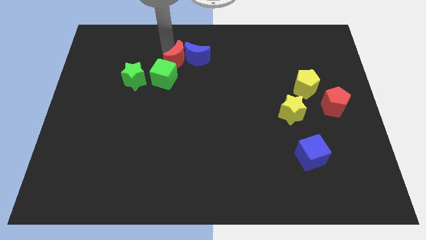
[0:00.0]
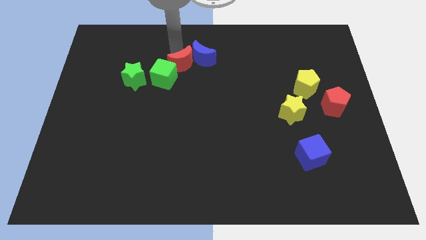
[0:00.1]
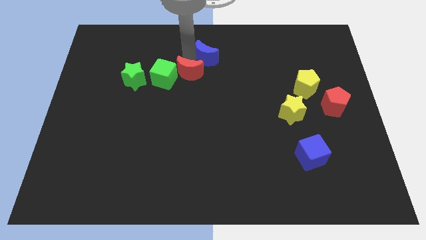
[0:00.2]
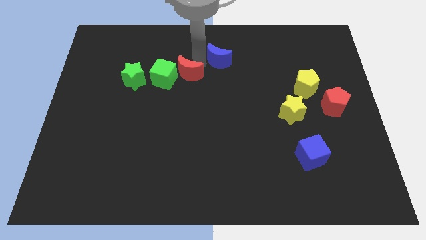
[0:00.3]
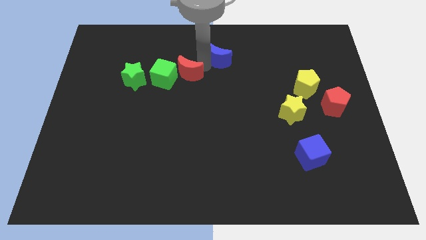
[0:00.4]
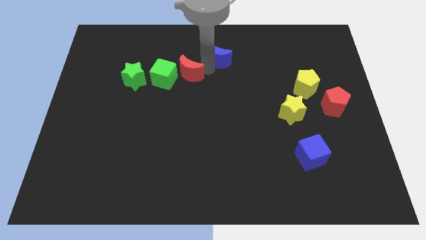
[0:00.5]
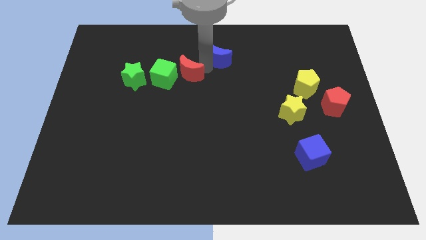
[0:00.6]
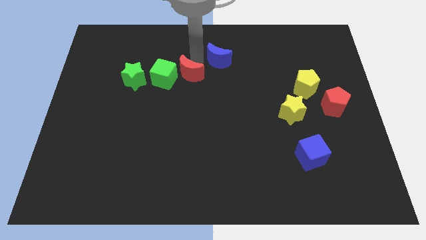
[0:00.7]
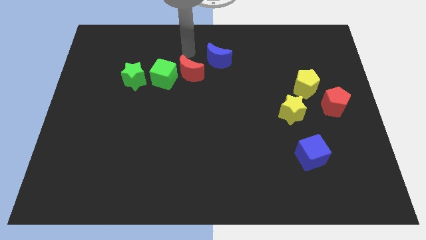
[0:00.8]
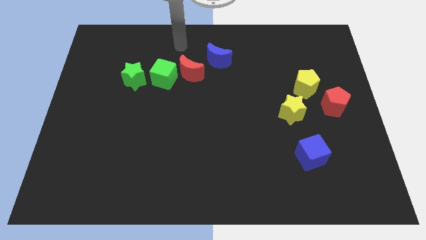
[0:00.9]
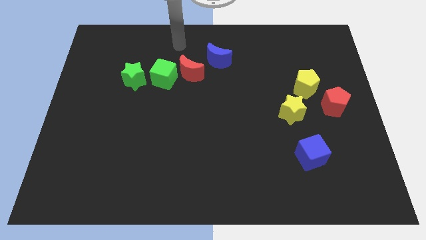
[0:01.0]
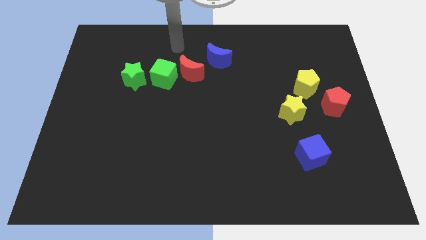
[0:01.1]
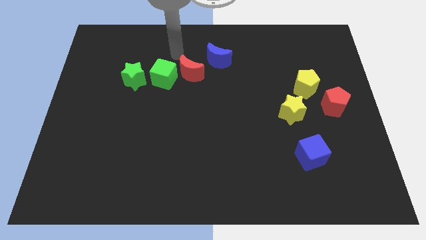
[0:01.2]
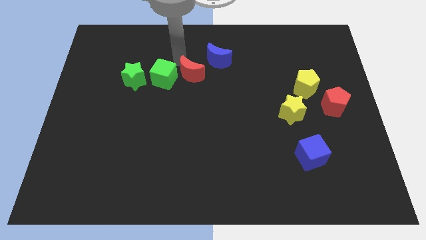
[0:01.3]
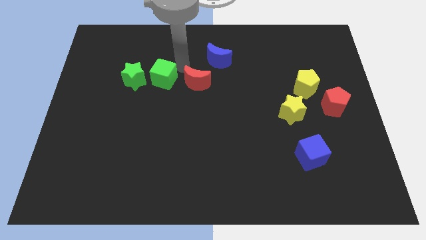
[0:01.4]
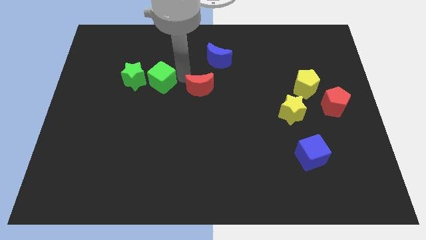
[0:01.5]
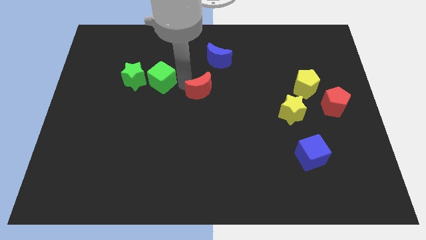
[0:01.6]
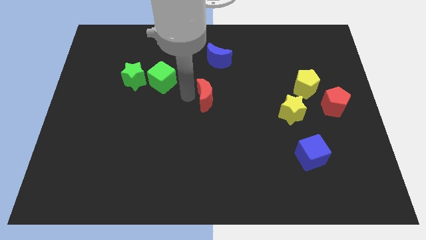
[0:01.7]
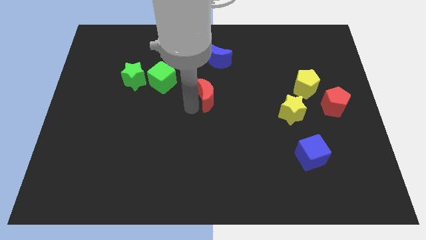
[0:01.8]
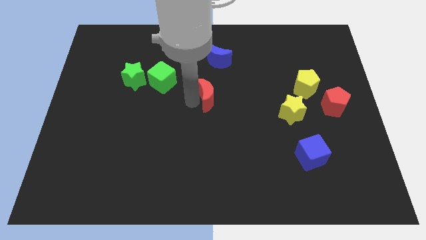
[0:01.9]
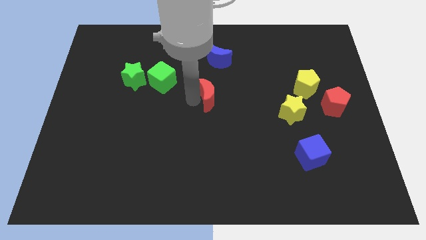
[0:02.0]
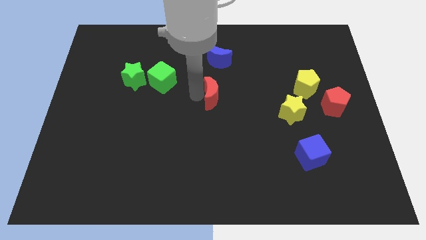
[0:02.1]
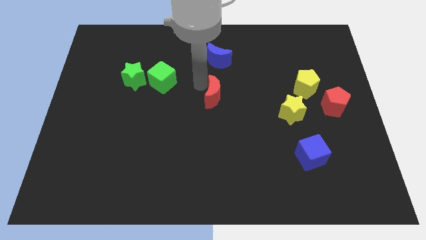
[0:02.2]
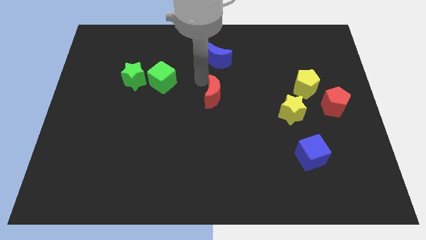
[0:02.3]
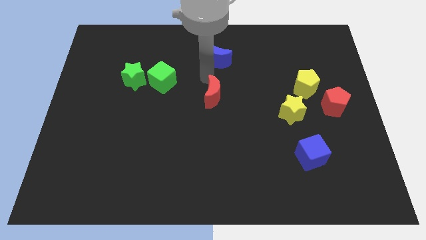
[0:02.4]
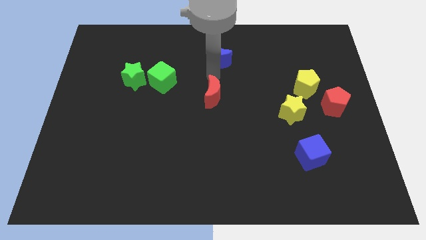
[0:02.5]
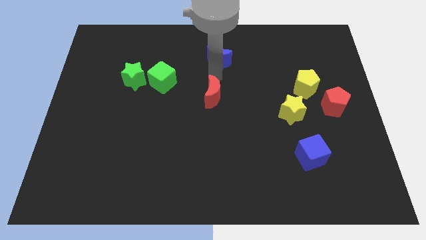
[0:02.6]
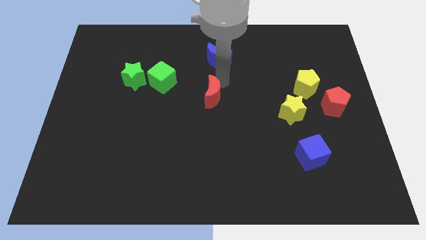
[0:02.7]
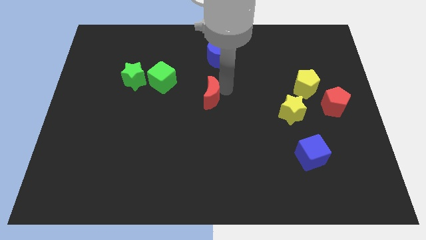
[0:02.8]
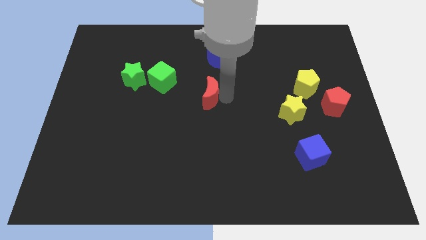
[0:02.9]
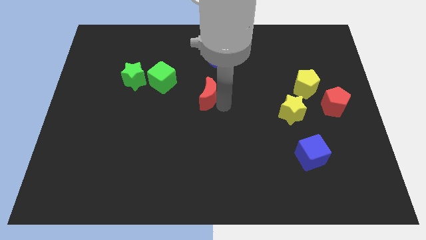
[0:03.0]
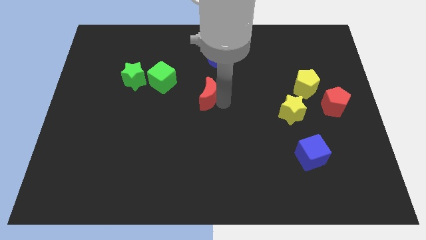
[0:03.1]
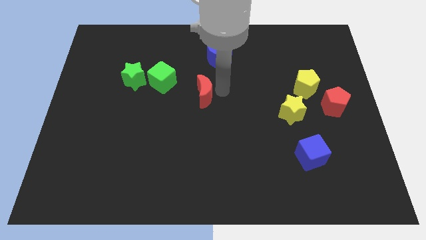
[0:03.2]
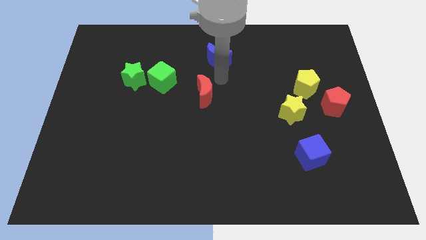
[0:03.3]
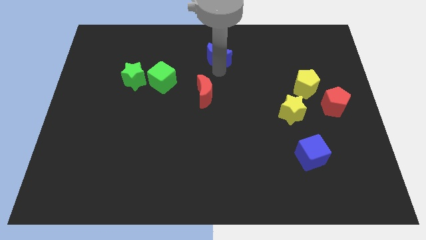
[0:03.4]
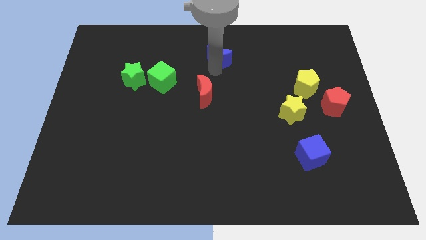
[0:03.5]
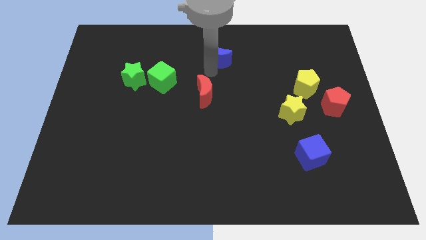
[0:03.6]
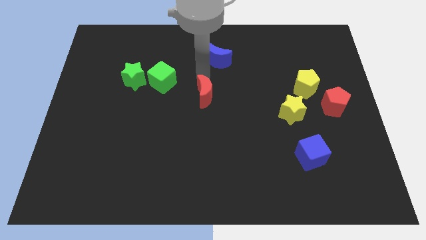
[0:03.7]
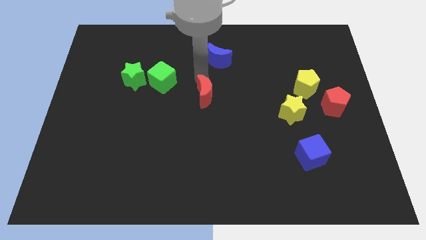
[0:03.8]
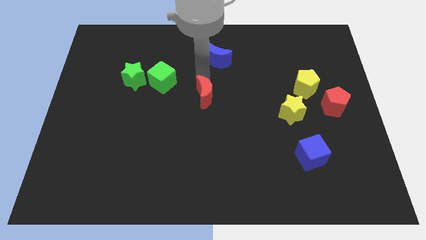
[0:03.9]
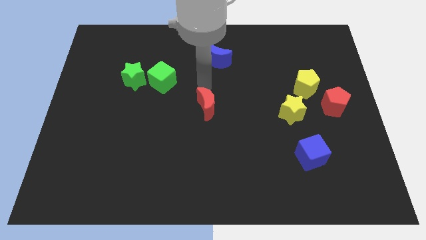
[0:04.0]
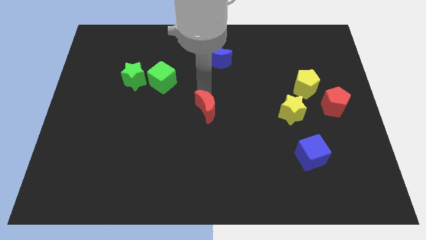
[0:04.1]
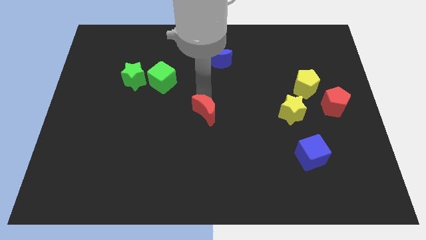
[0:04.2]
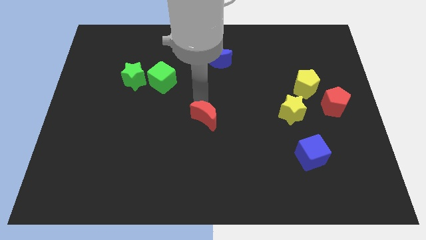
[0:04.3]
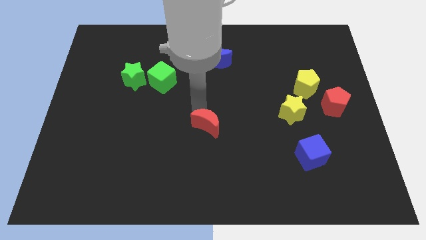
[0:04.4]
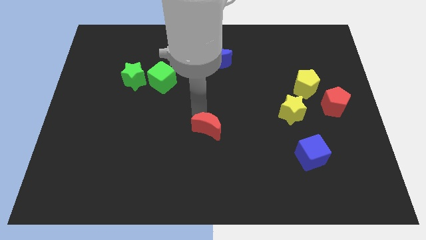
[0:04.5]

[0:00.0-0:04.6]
push the red crescent to the center of the board

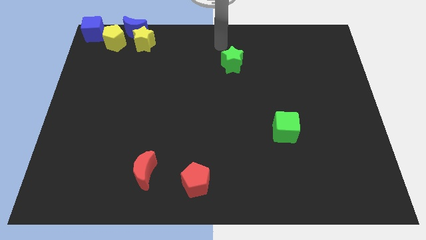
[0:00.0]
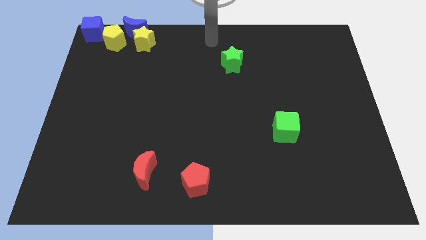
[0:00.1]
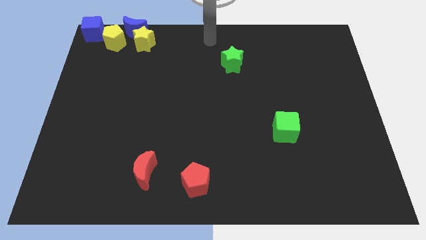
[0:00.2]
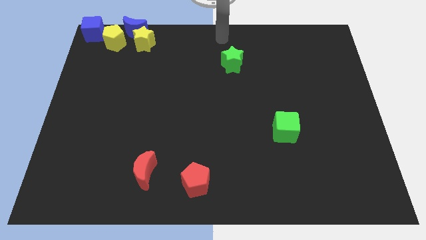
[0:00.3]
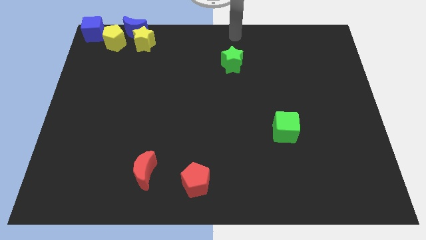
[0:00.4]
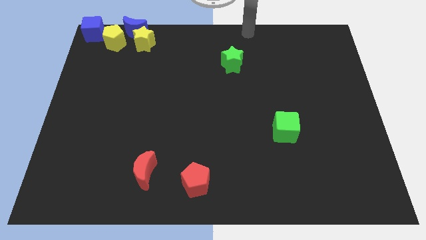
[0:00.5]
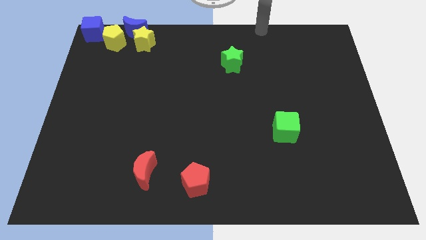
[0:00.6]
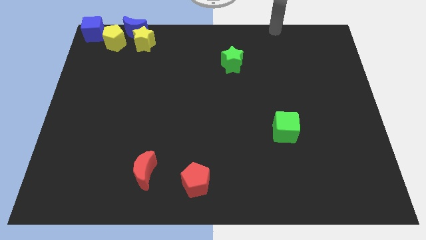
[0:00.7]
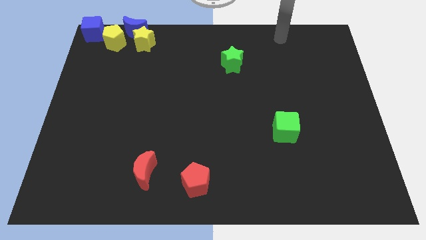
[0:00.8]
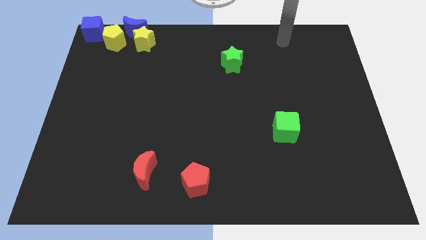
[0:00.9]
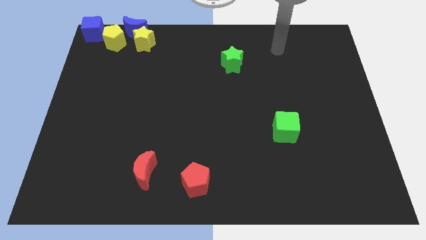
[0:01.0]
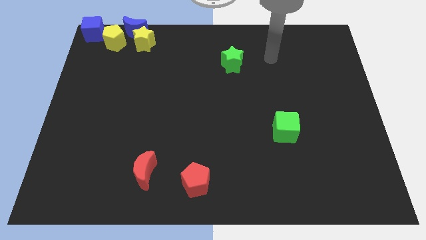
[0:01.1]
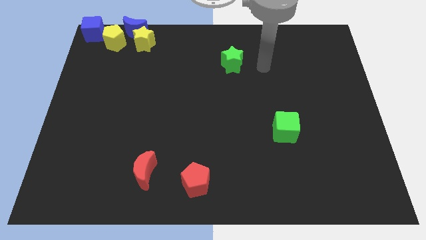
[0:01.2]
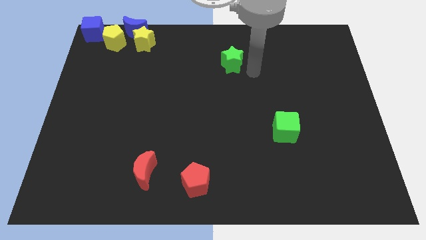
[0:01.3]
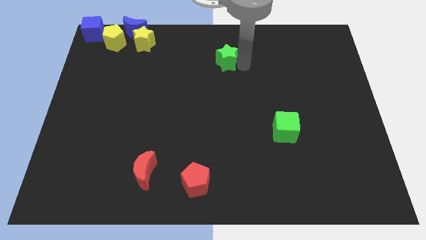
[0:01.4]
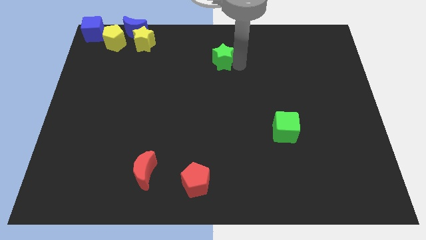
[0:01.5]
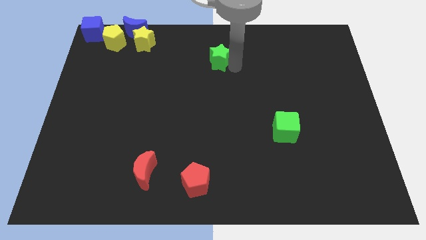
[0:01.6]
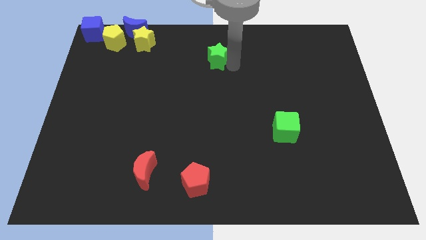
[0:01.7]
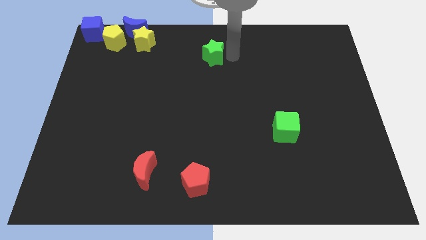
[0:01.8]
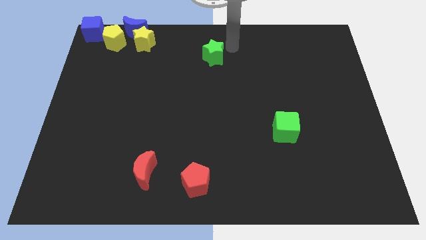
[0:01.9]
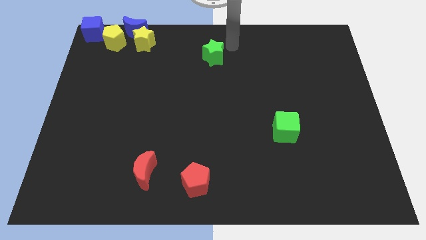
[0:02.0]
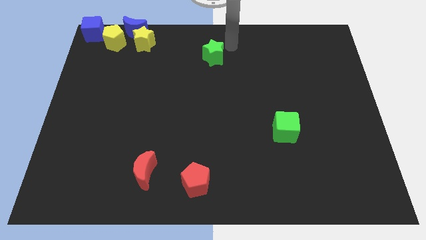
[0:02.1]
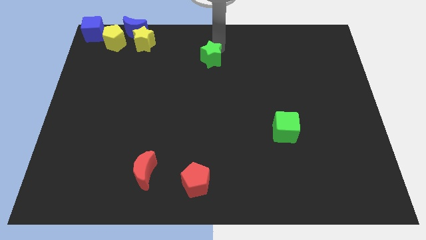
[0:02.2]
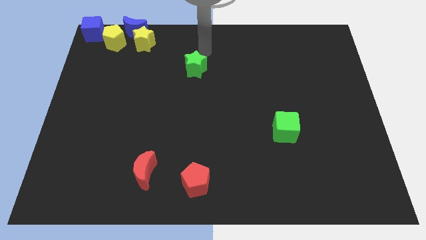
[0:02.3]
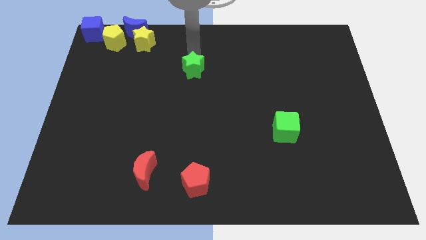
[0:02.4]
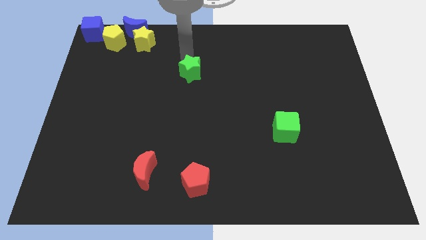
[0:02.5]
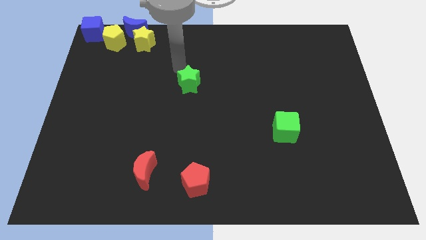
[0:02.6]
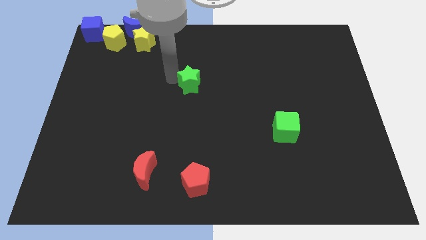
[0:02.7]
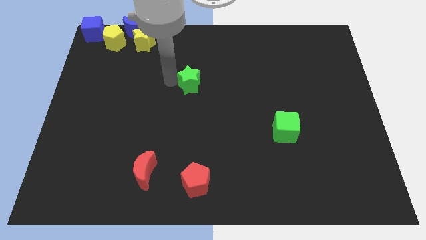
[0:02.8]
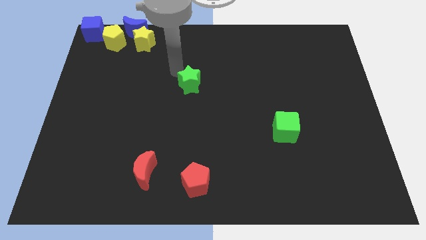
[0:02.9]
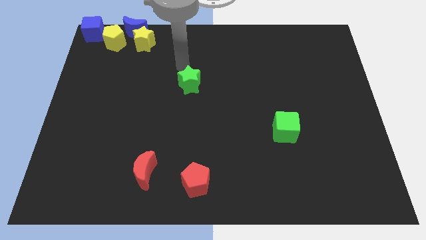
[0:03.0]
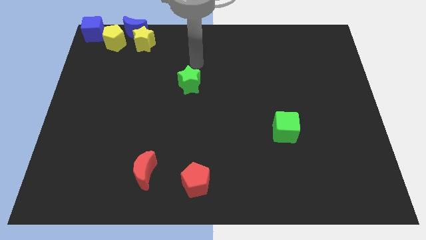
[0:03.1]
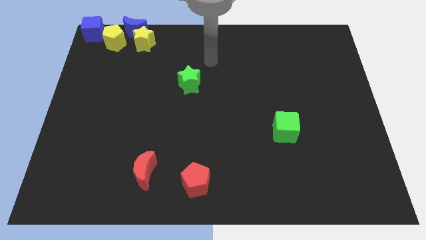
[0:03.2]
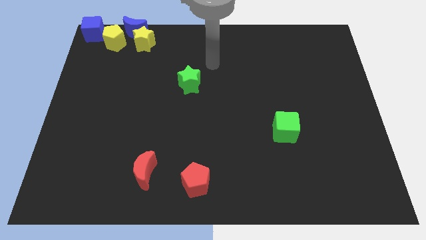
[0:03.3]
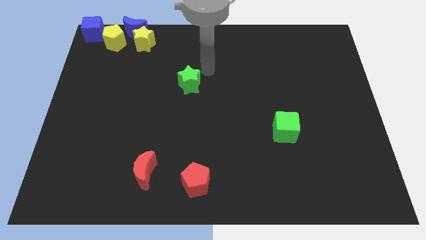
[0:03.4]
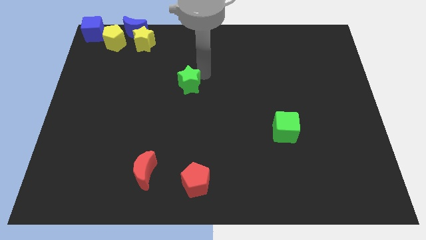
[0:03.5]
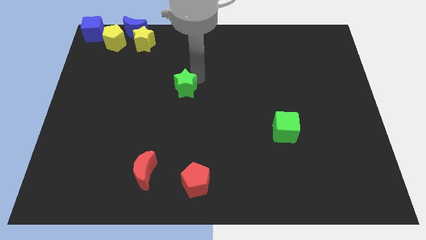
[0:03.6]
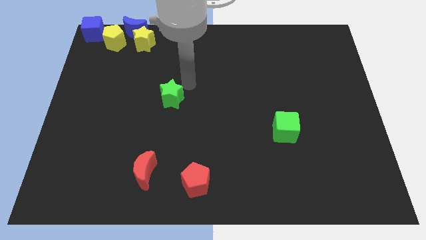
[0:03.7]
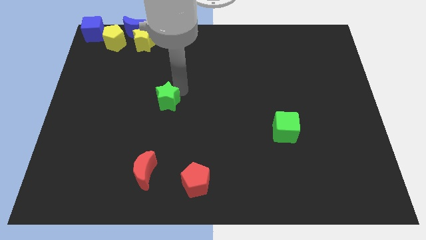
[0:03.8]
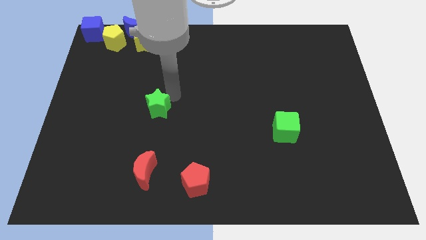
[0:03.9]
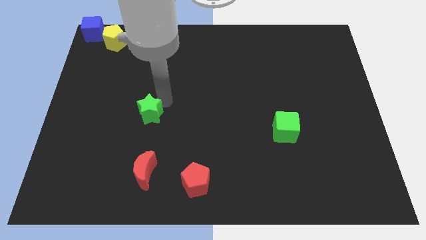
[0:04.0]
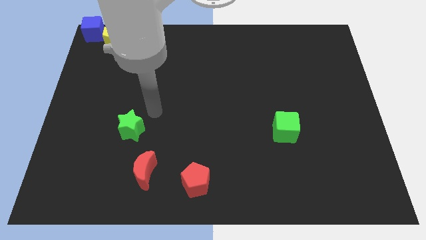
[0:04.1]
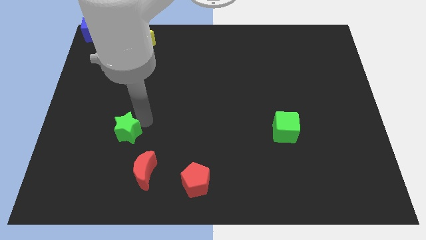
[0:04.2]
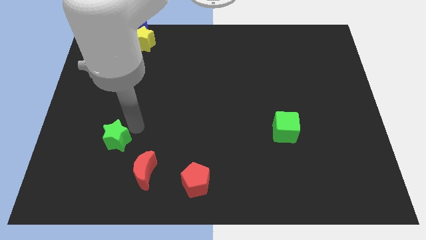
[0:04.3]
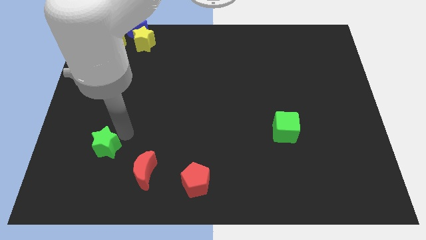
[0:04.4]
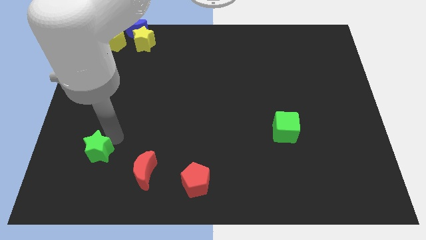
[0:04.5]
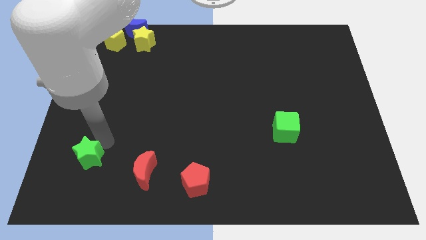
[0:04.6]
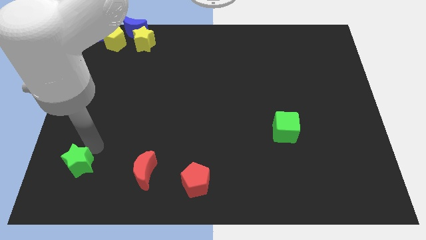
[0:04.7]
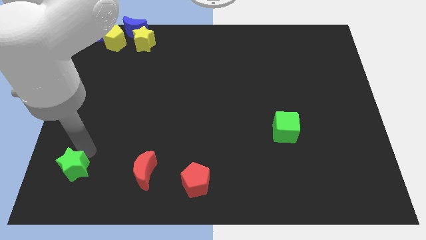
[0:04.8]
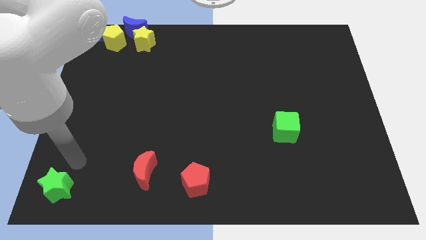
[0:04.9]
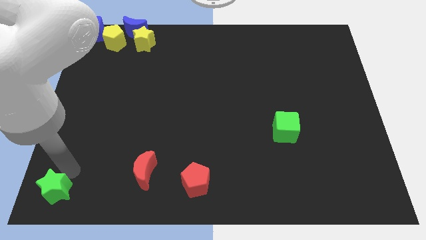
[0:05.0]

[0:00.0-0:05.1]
move the green star to the bottom left corner
